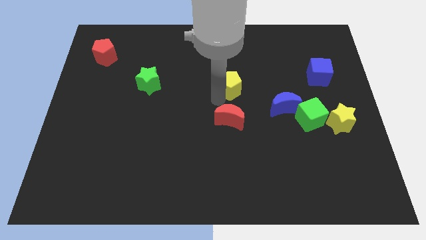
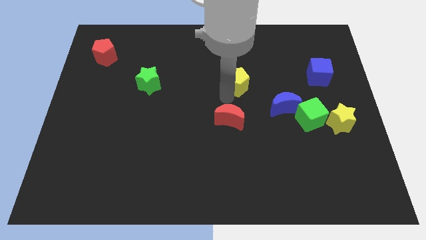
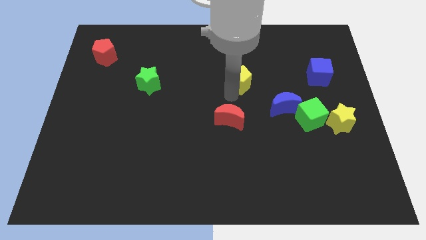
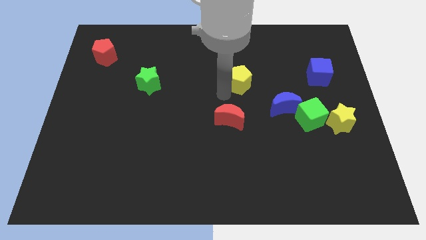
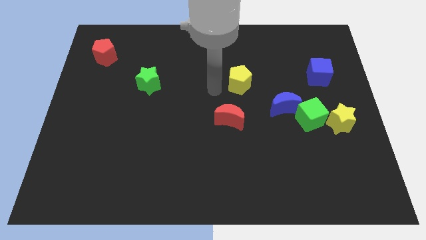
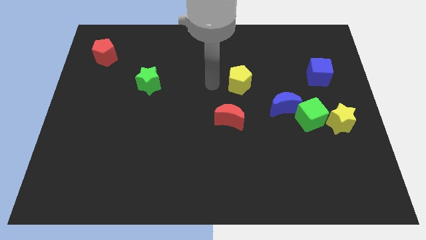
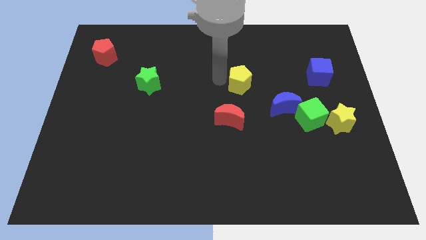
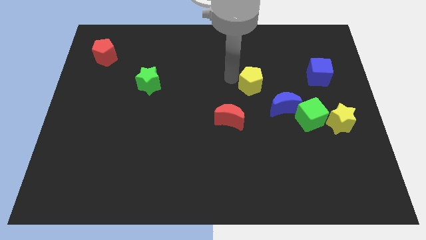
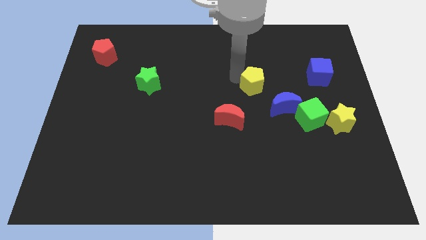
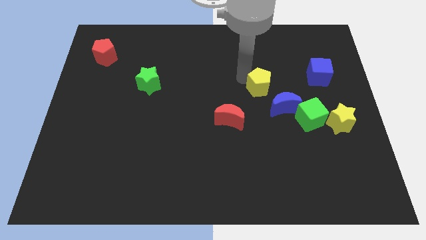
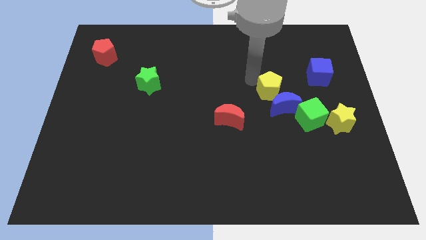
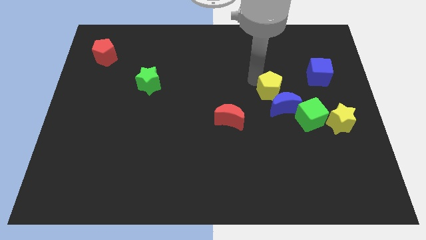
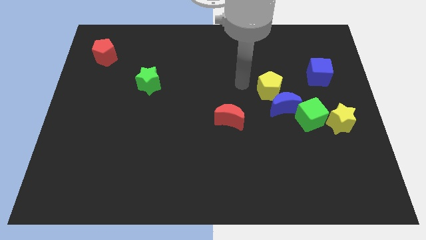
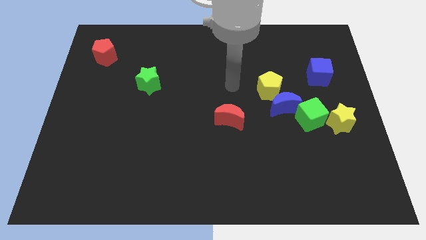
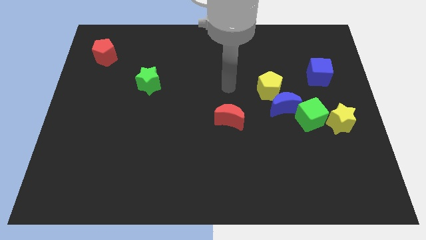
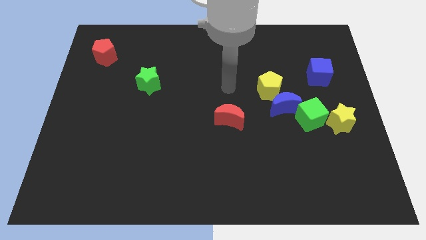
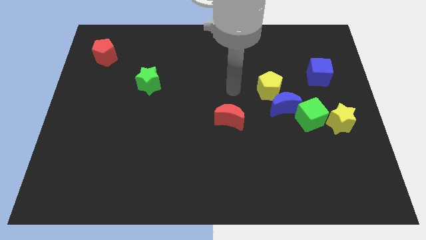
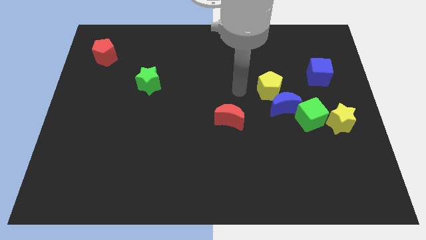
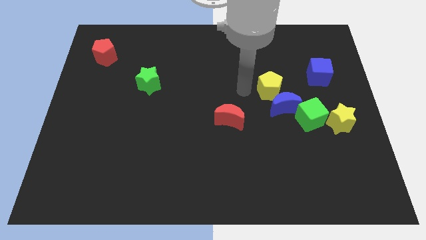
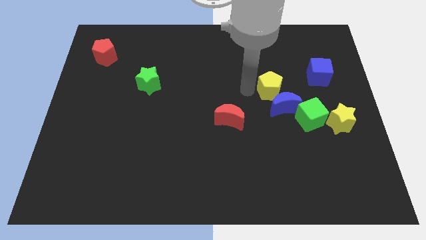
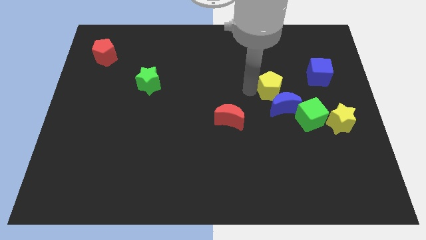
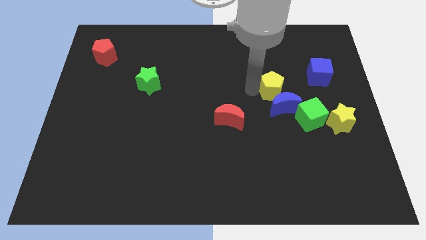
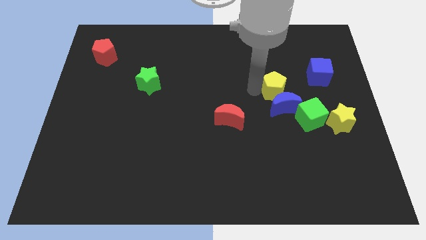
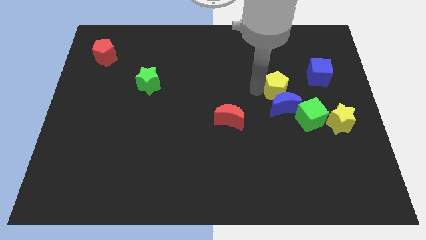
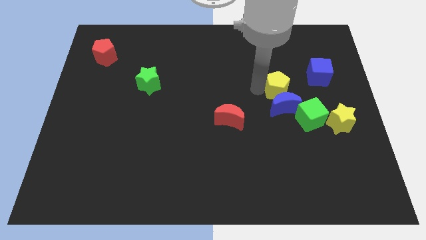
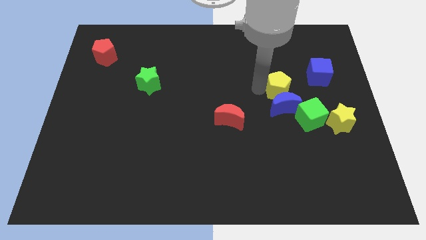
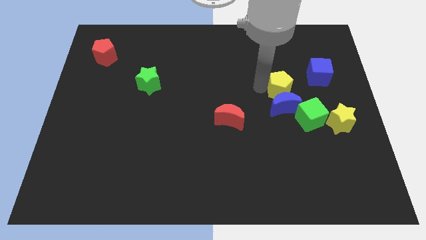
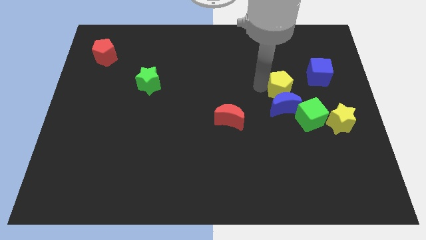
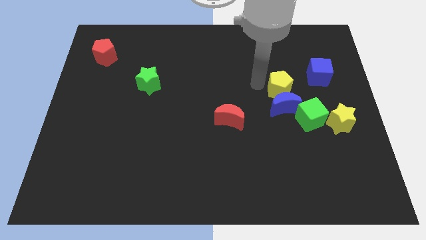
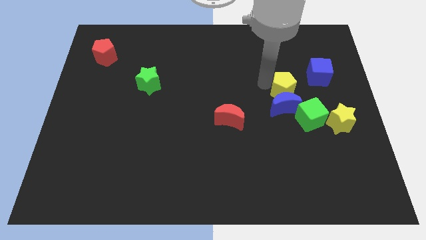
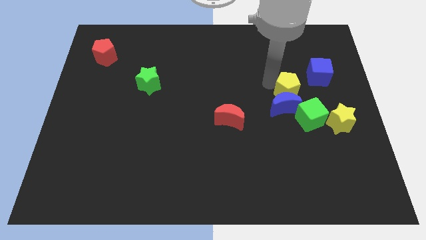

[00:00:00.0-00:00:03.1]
put the yellow pentagon at the top of the blue crescent

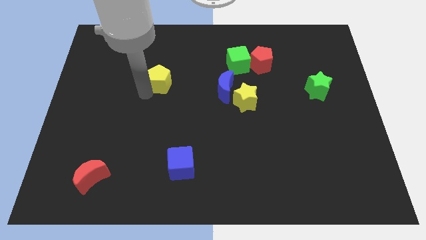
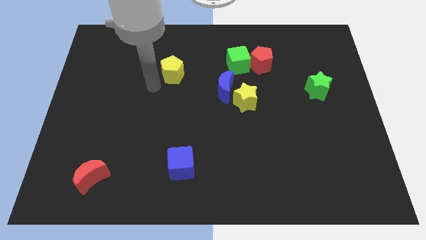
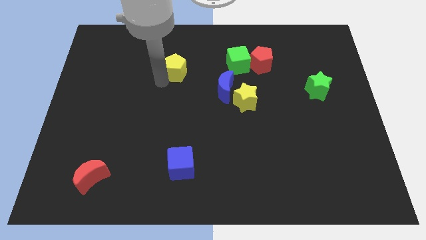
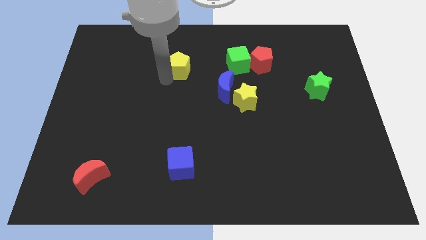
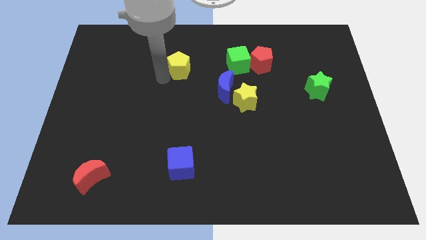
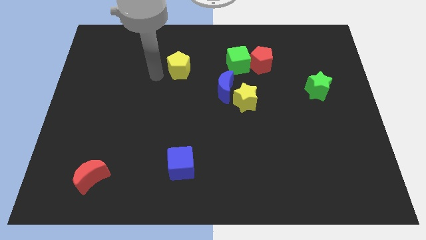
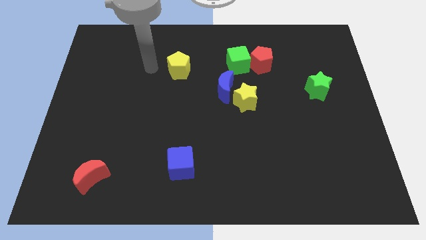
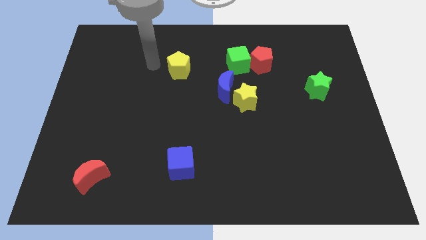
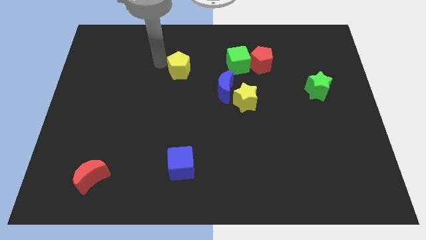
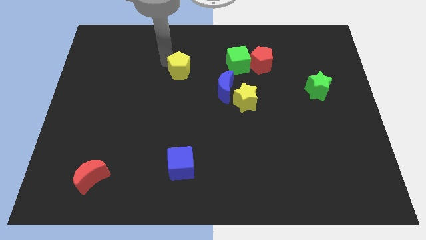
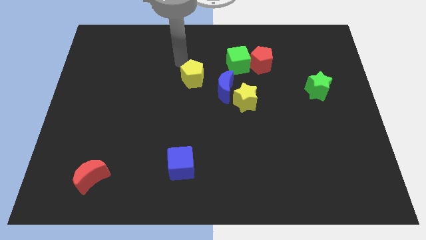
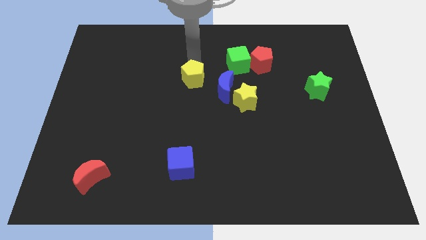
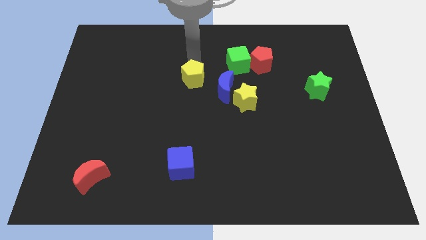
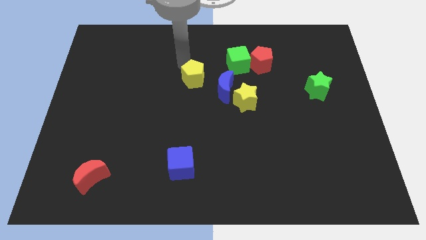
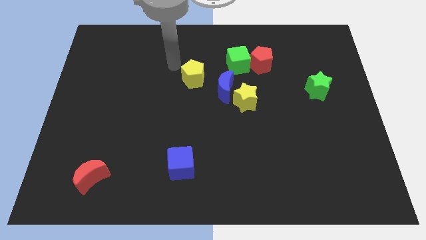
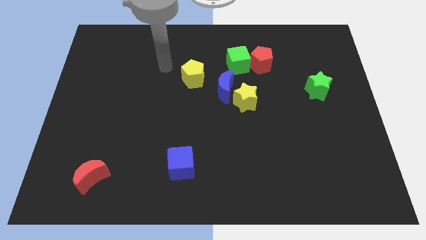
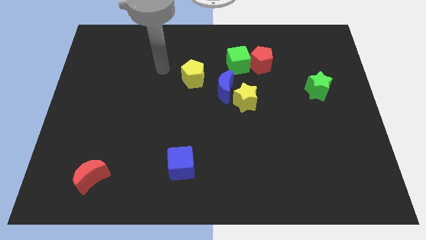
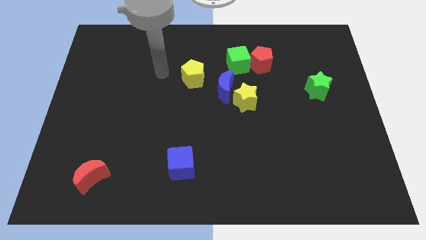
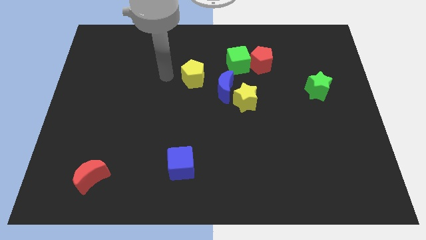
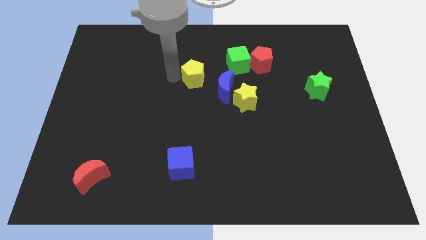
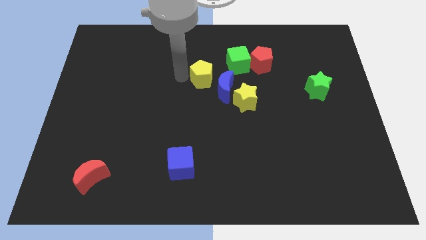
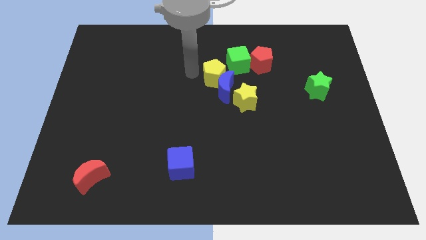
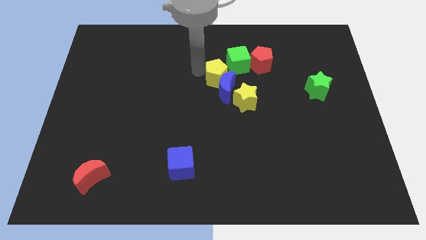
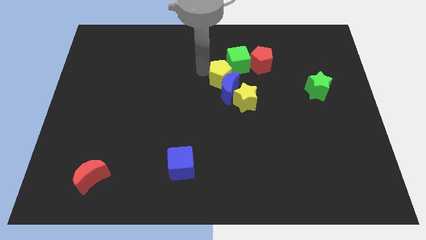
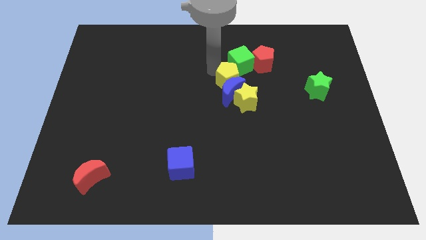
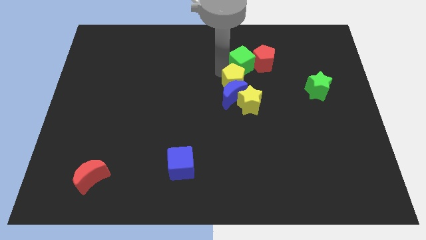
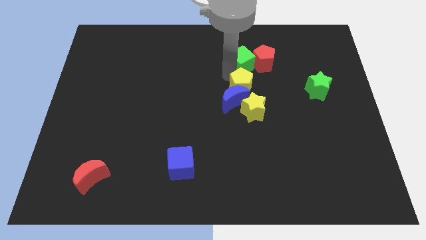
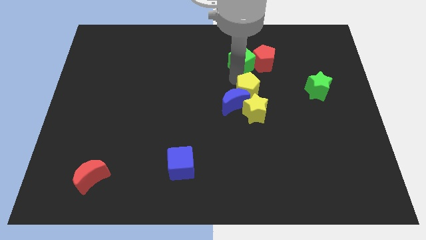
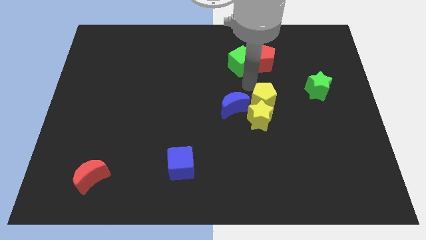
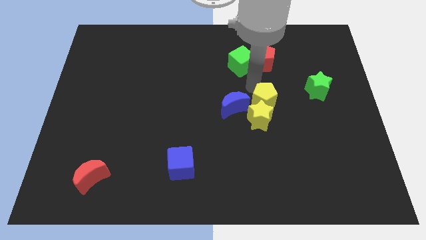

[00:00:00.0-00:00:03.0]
move the yellow pentagon into the yellow star

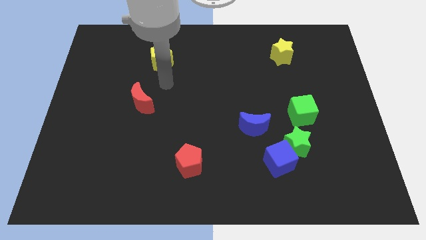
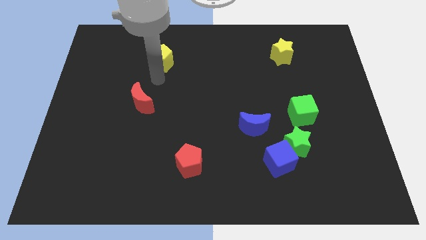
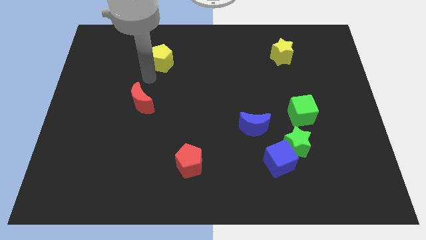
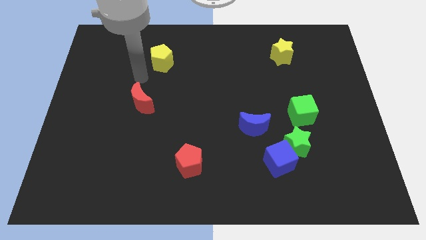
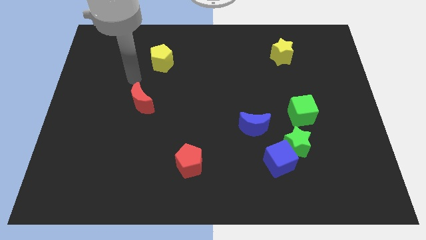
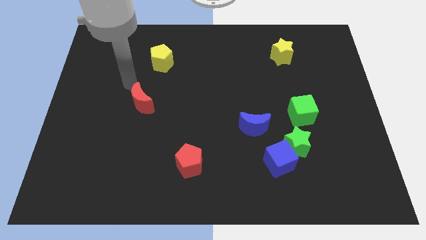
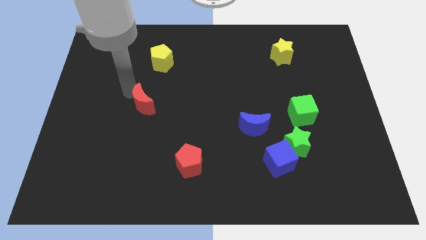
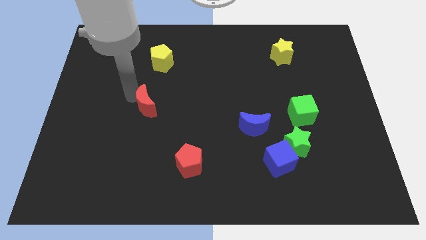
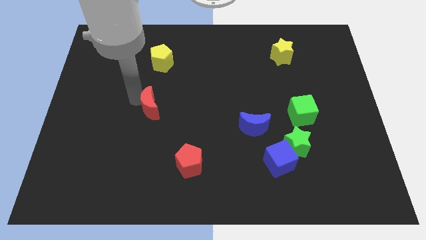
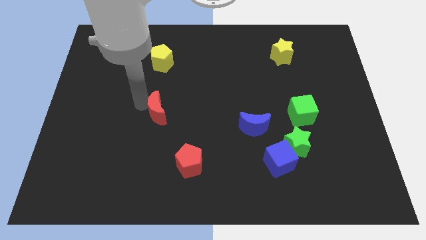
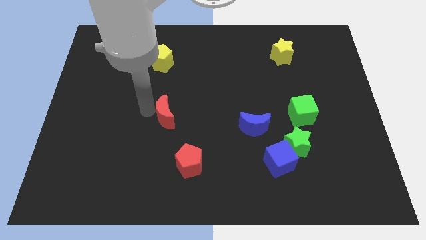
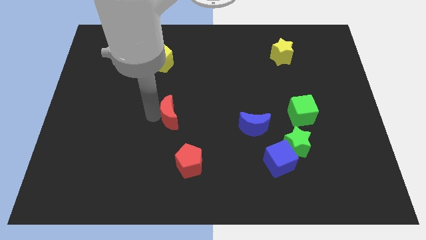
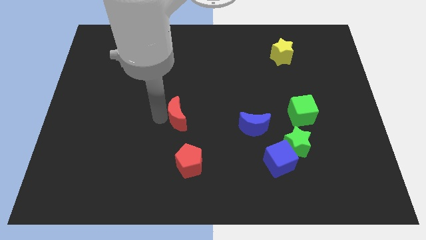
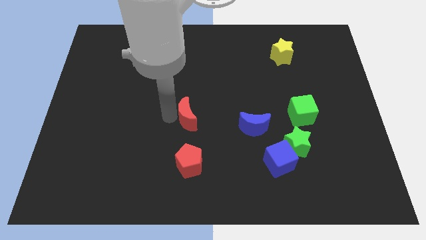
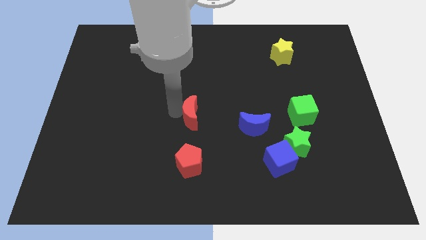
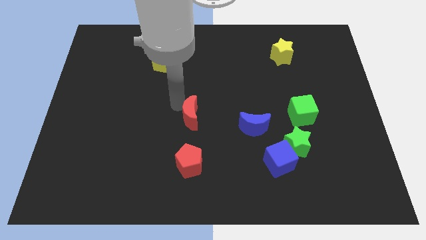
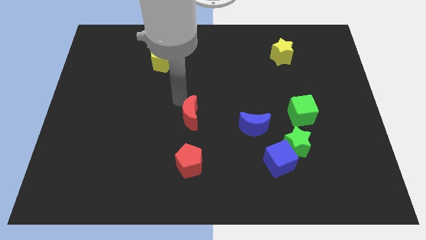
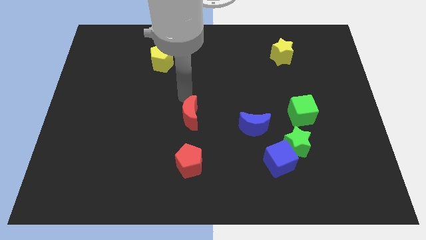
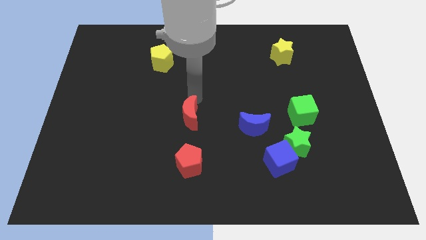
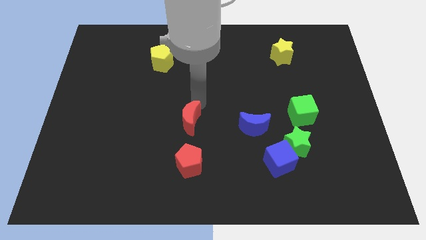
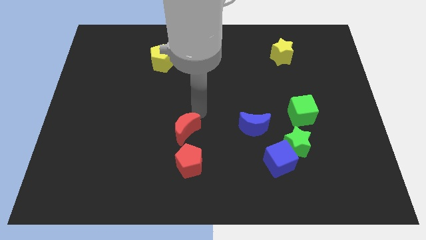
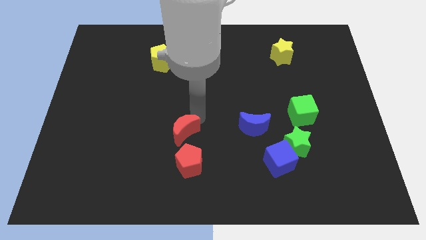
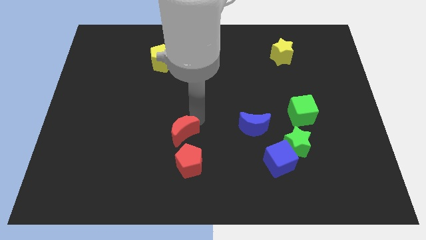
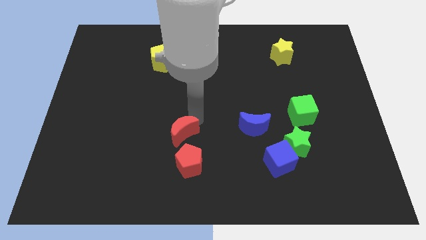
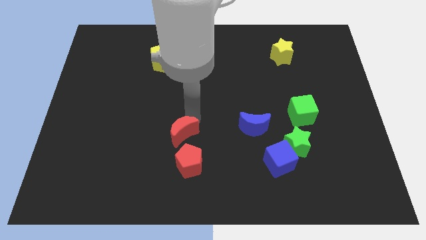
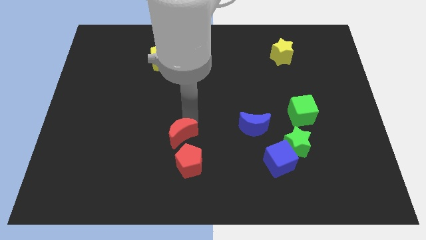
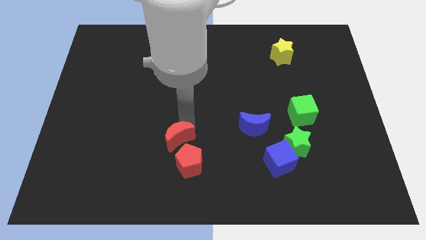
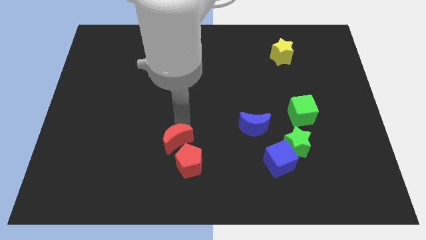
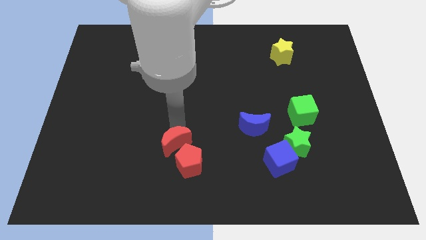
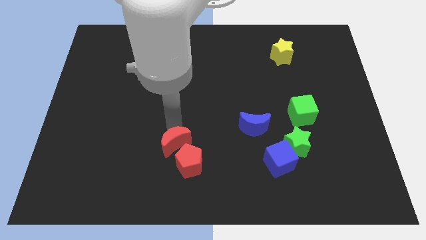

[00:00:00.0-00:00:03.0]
move the red moon above to the red pentagon
